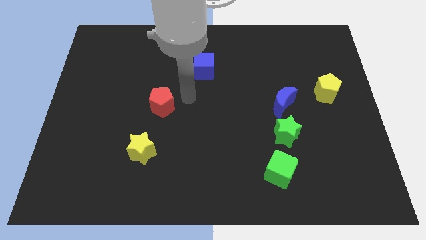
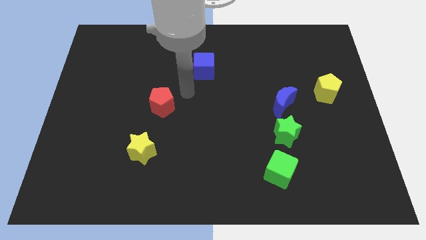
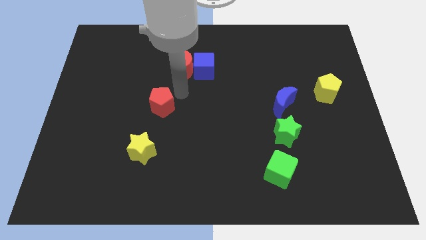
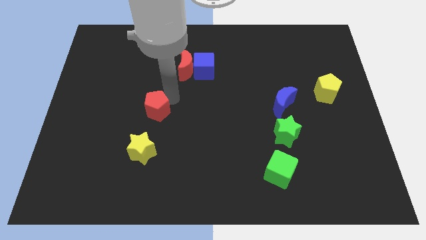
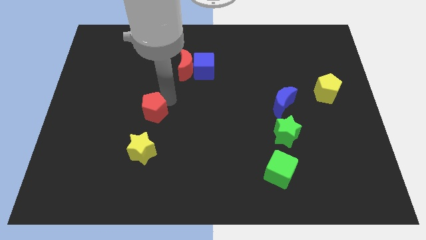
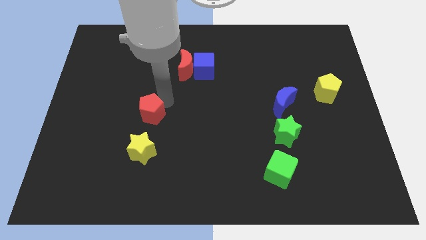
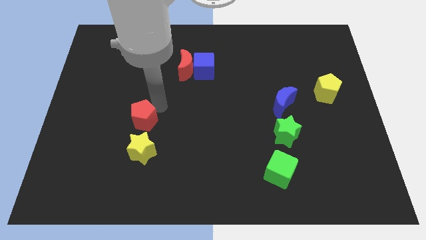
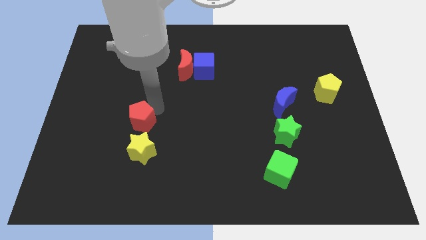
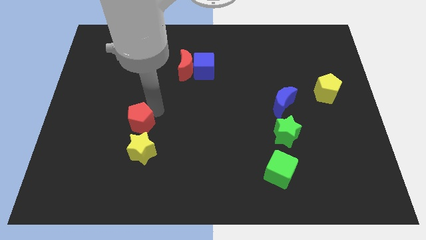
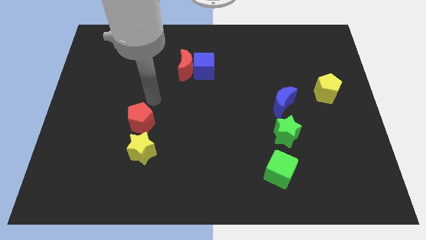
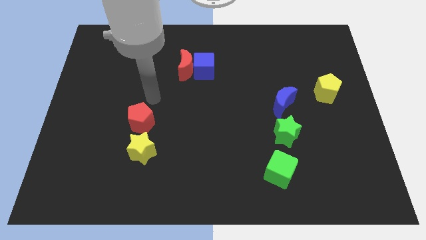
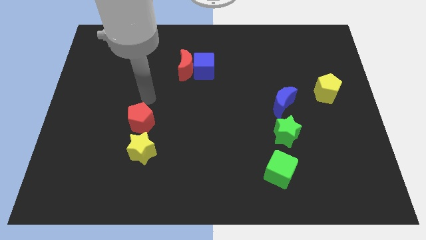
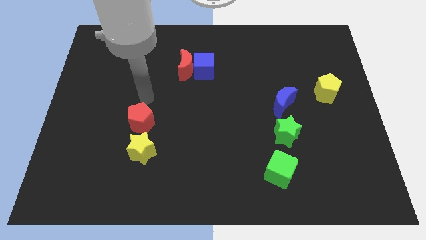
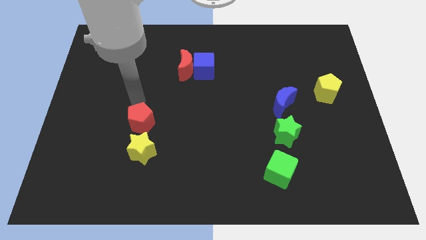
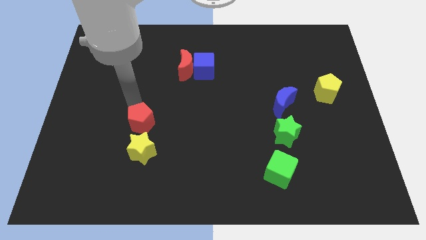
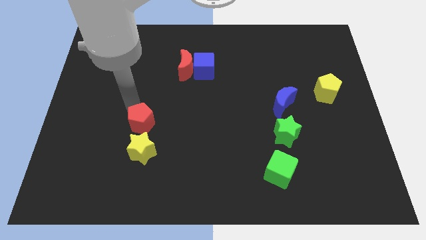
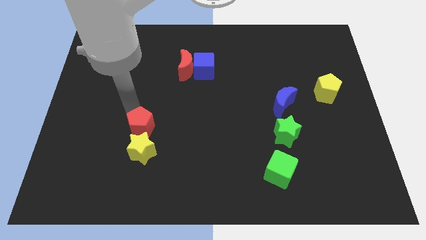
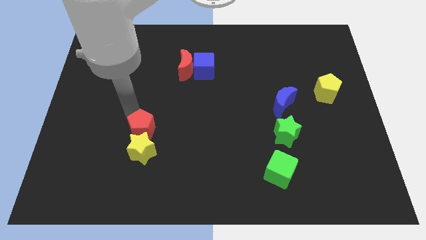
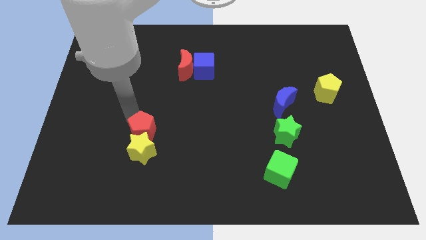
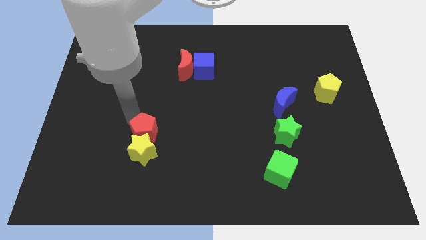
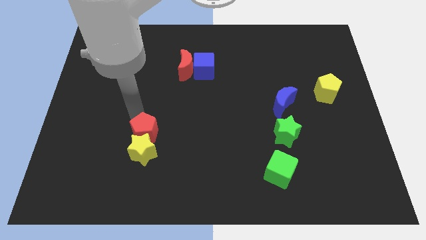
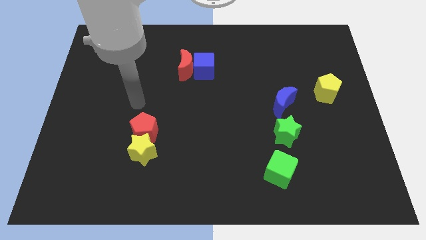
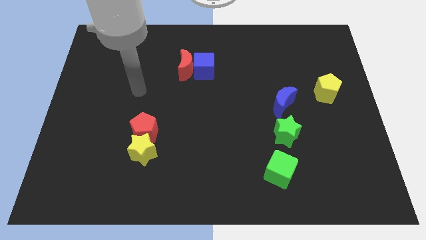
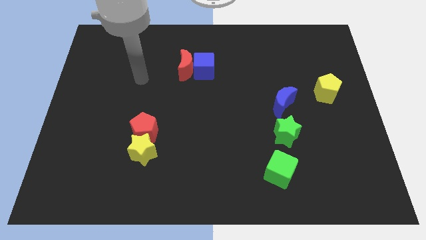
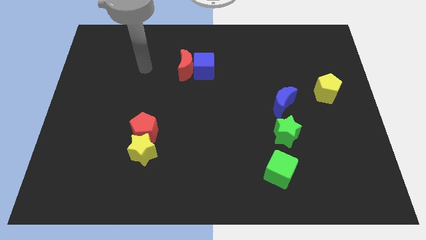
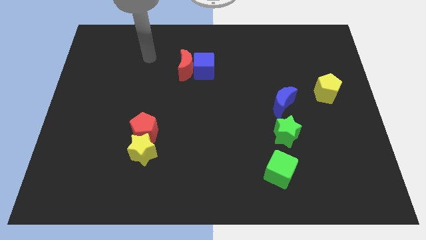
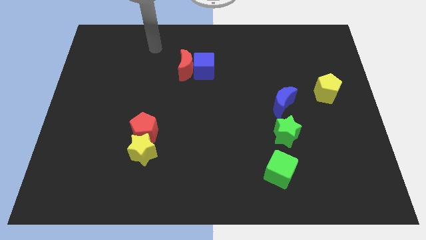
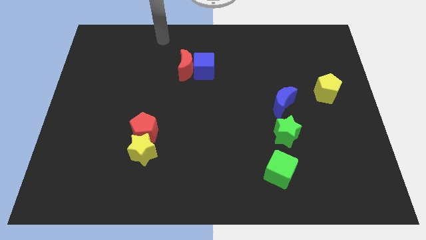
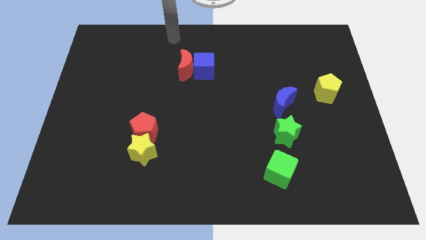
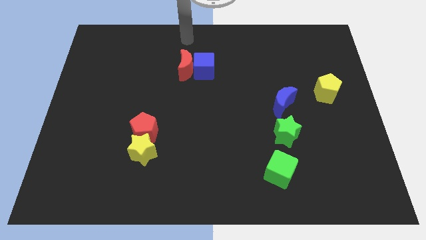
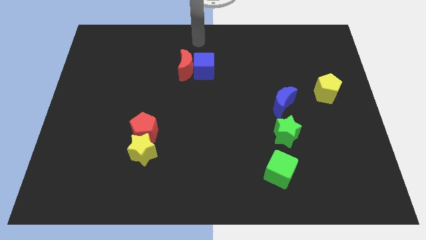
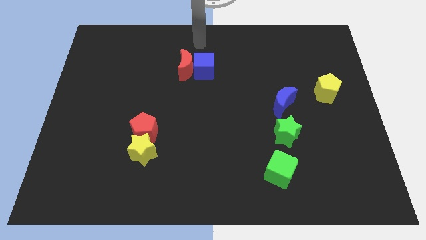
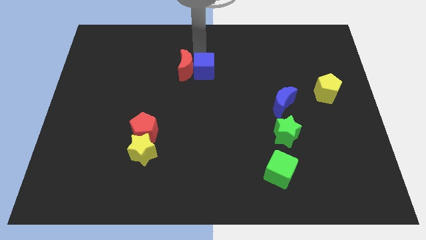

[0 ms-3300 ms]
move the red pentagon into the yellow star

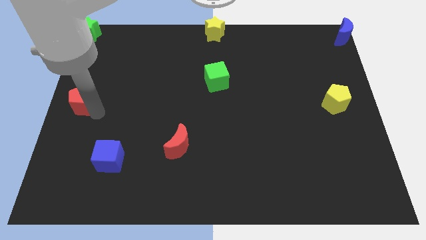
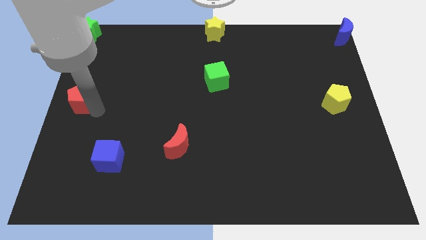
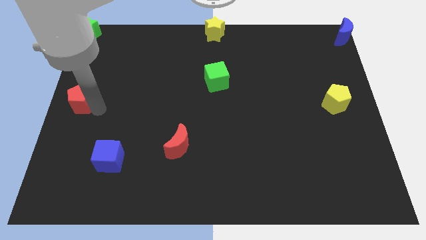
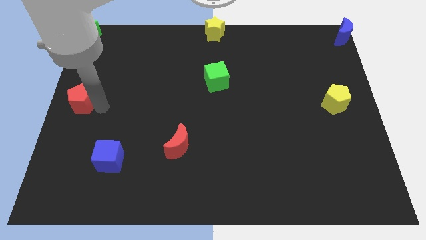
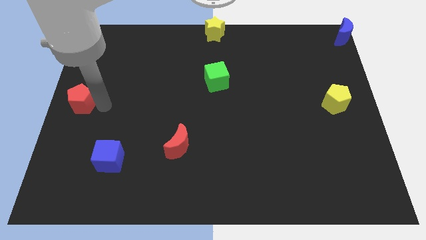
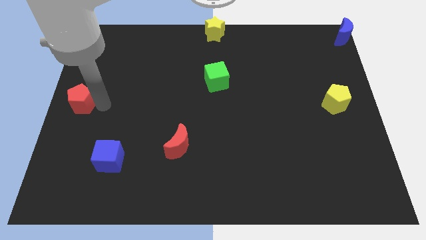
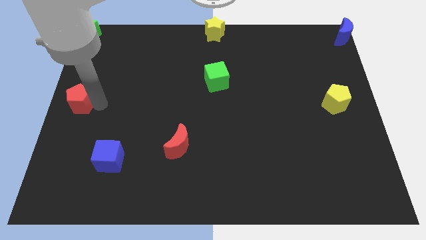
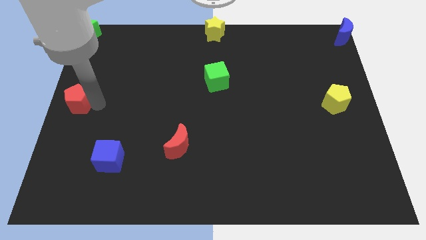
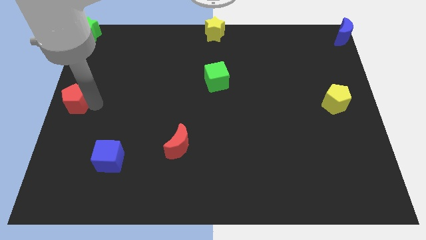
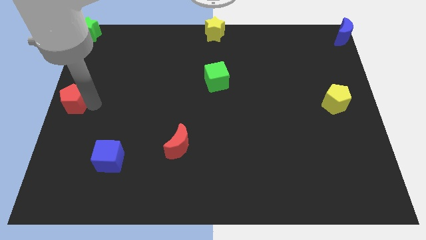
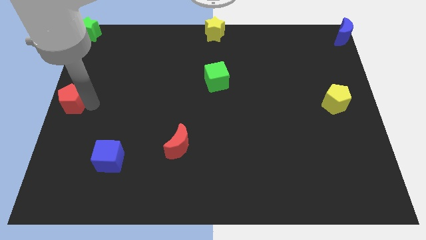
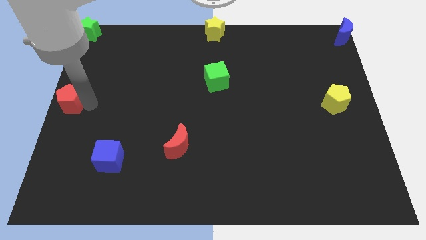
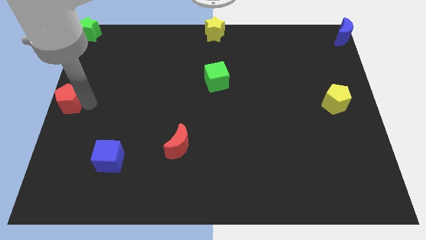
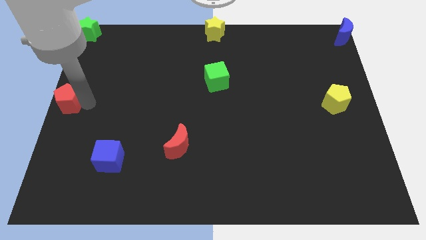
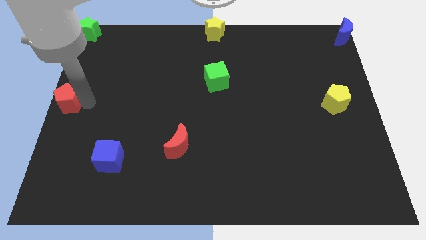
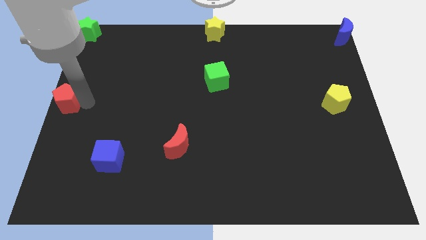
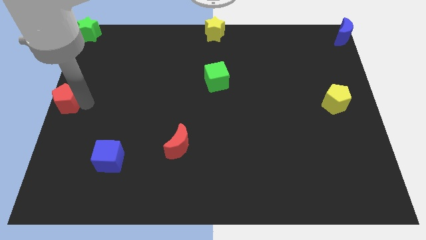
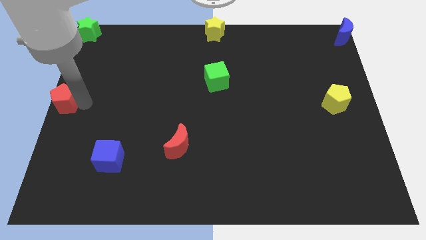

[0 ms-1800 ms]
place the red pentagon towards the center left of the board

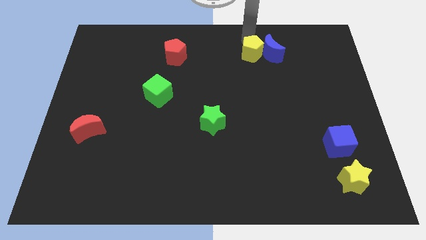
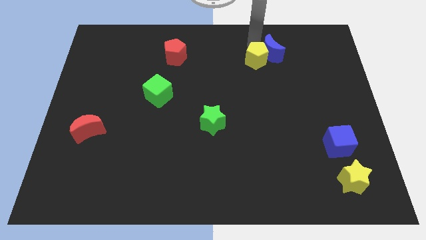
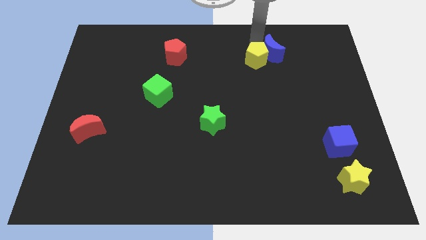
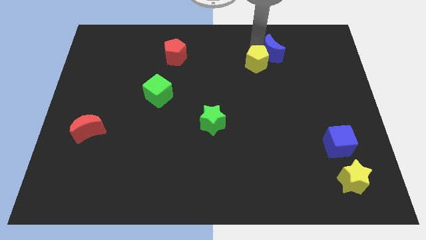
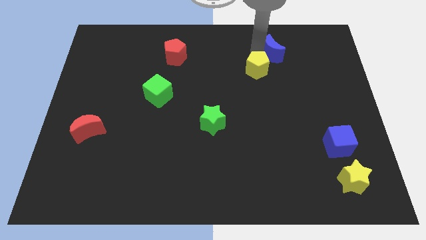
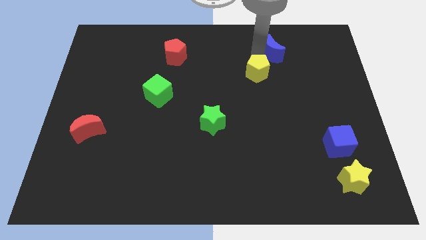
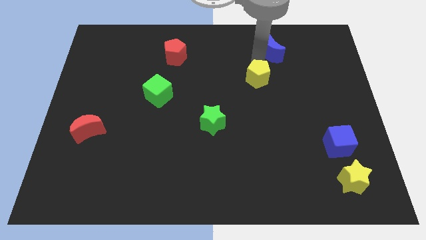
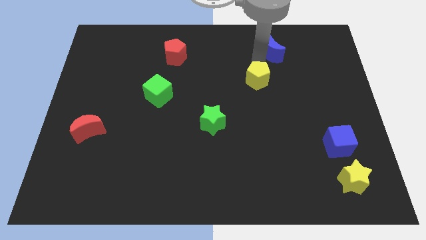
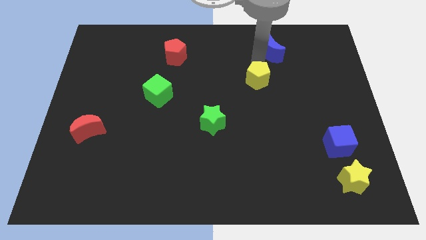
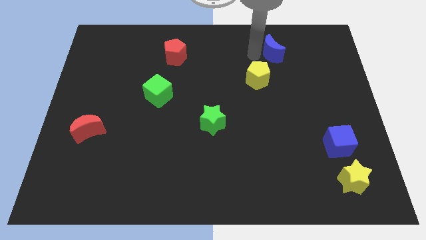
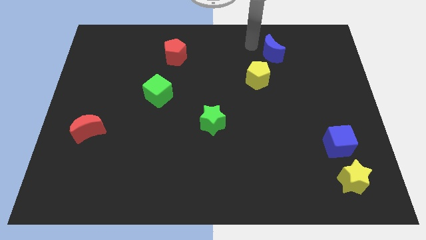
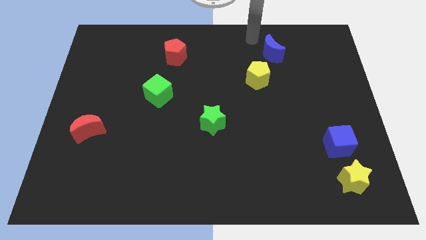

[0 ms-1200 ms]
push the yellow pentagon to the bottom of the blue crescent

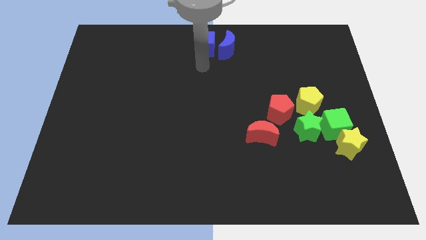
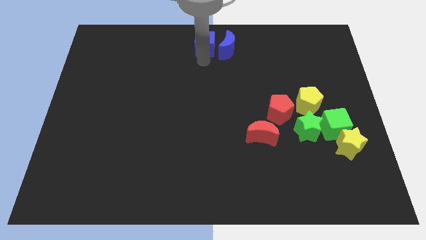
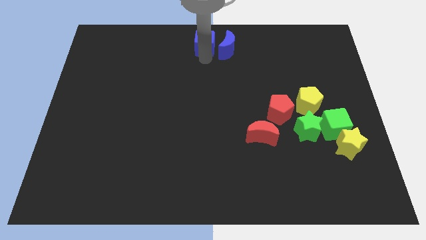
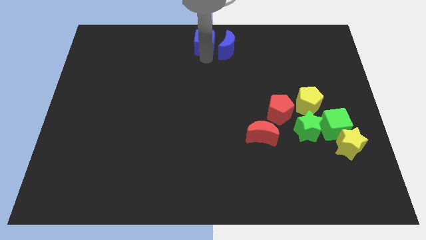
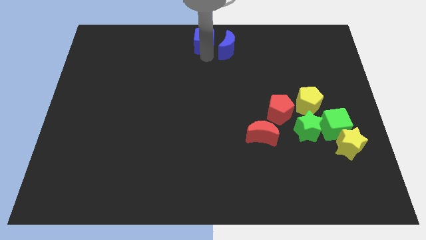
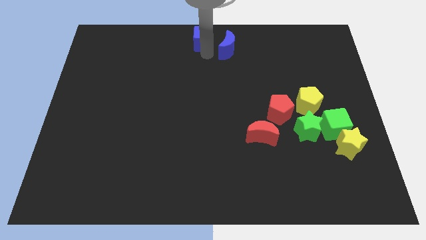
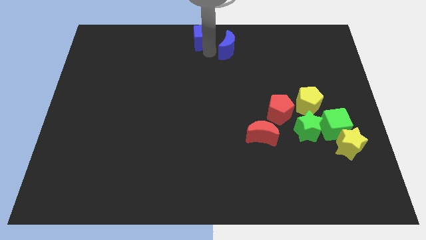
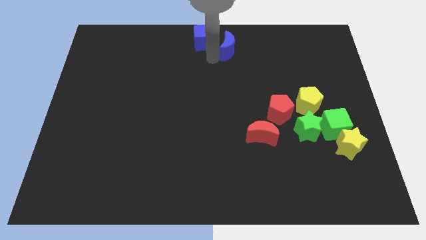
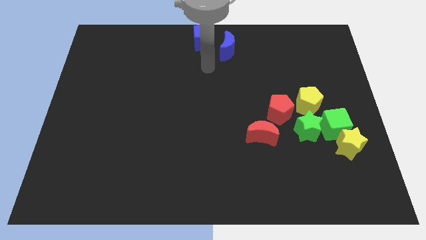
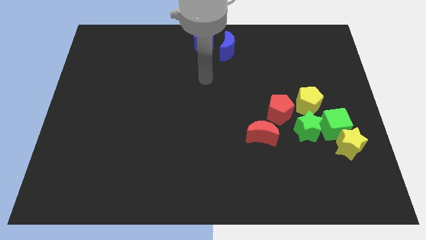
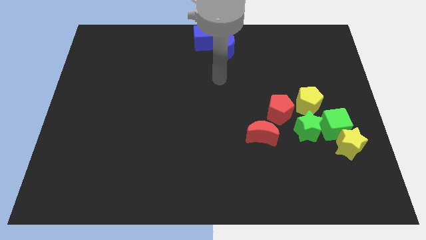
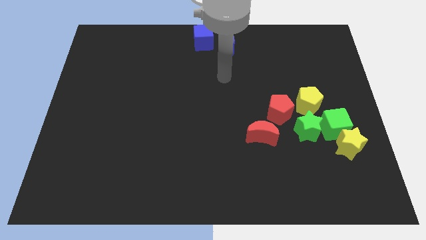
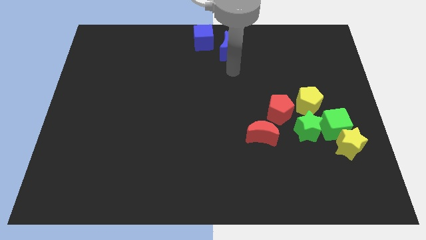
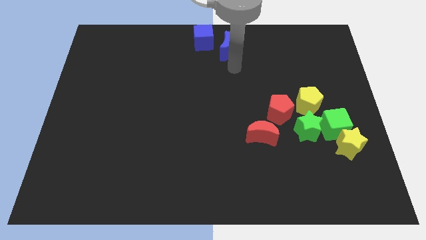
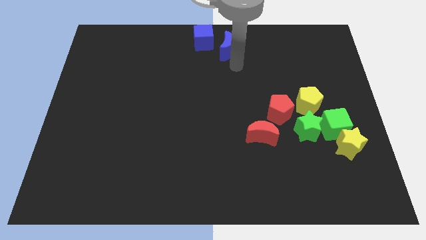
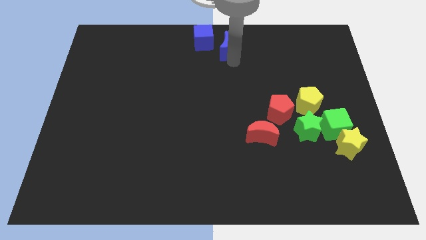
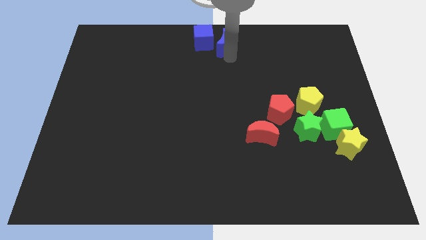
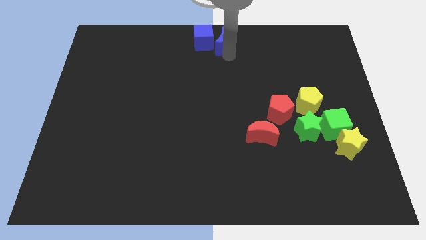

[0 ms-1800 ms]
push the blue blocks to the top center side

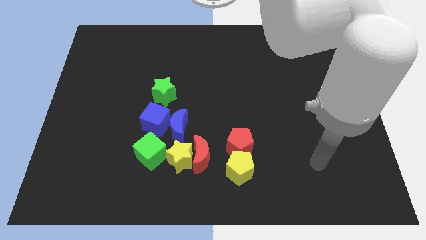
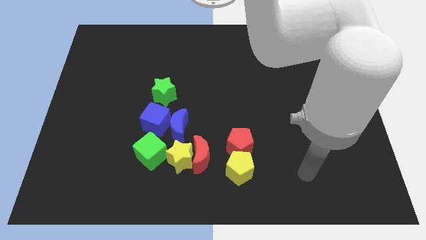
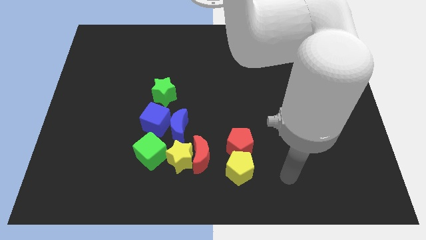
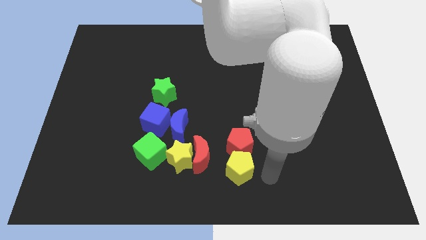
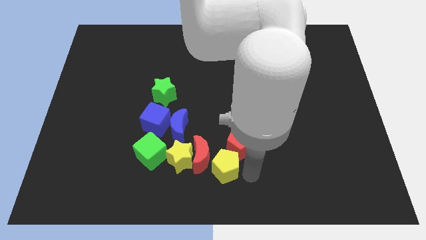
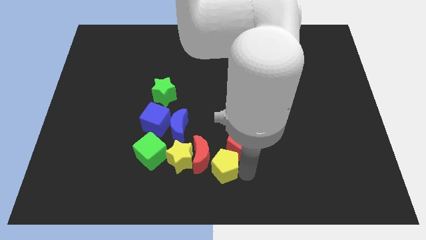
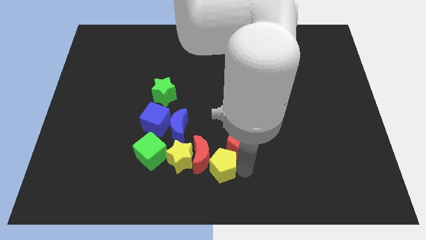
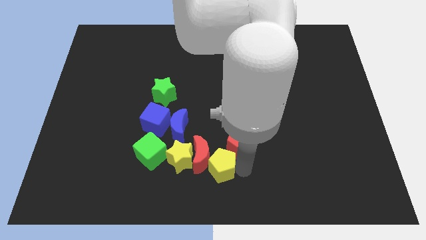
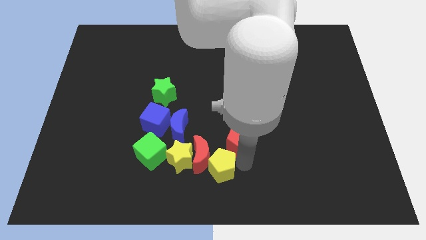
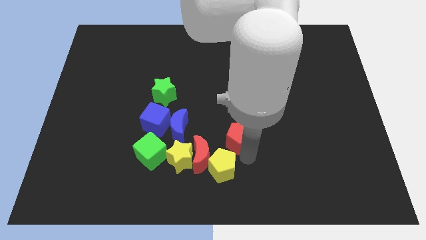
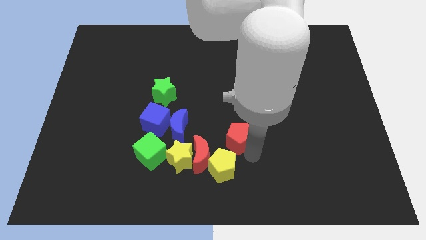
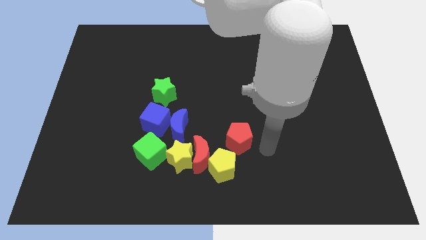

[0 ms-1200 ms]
place the yellow star near to the red crescent
